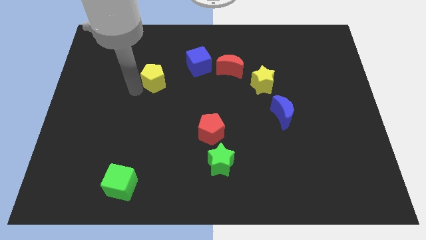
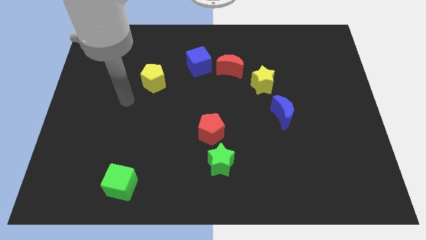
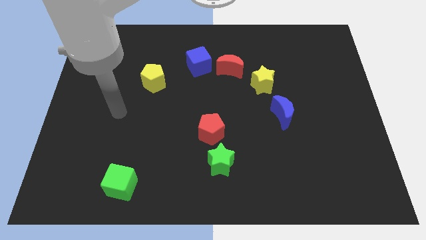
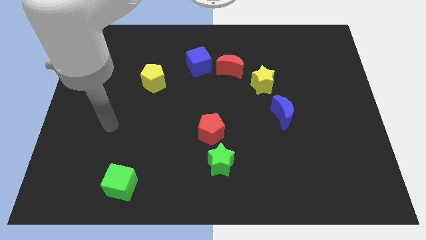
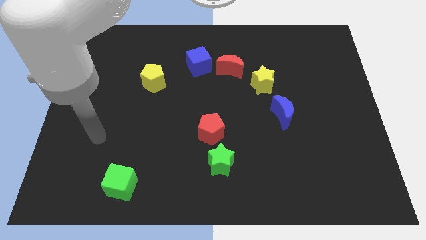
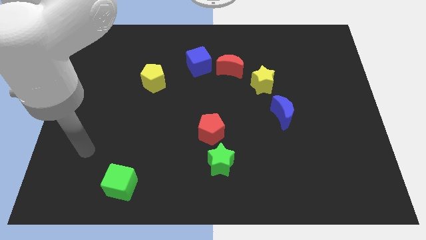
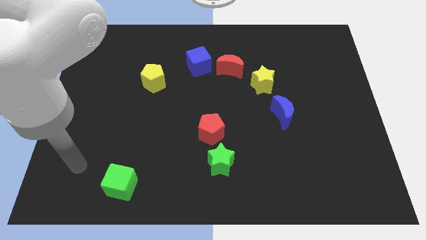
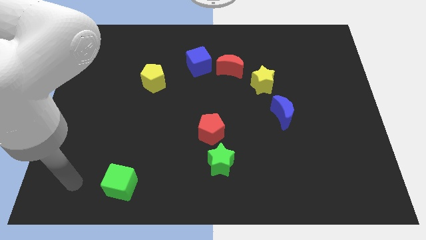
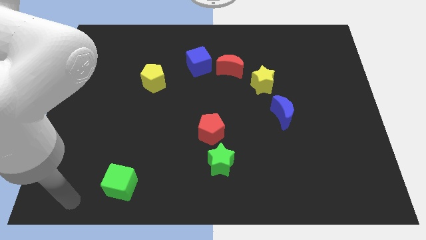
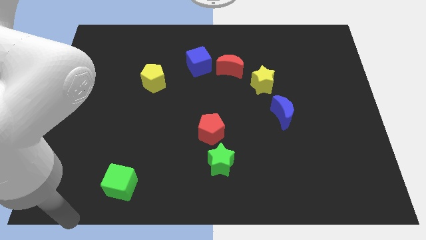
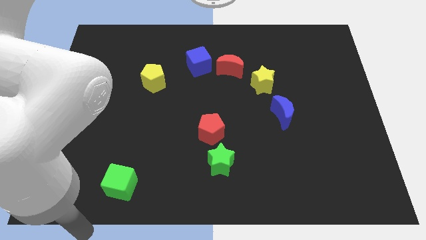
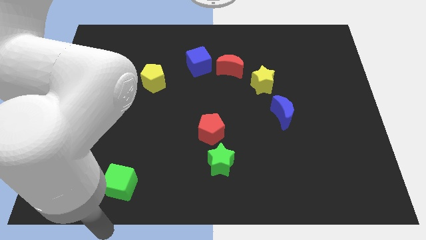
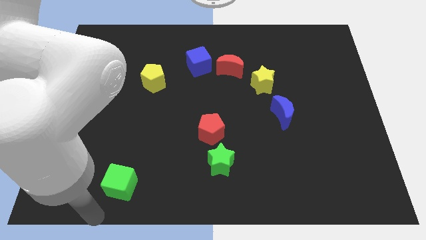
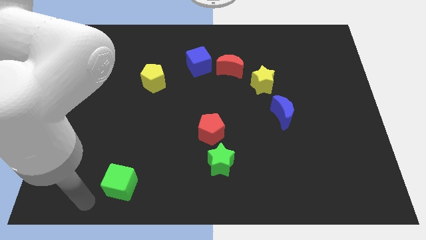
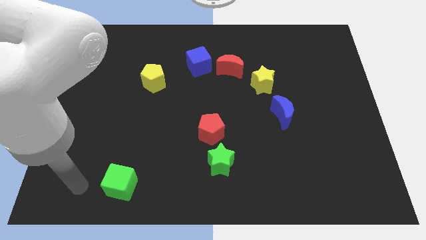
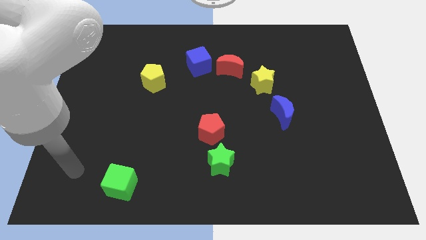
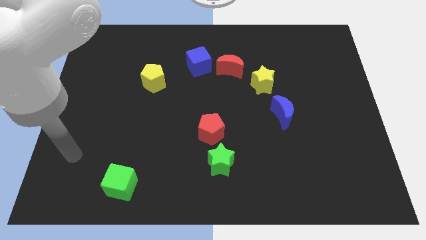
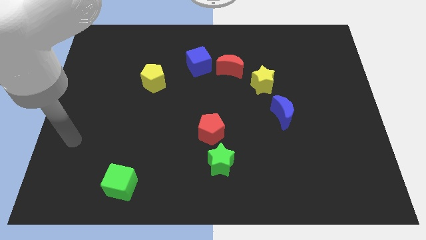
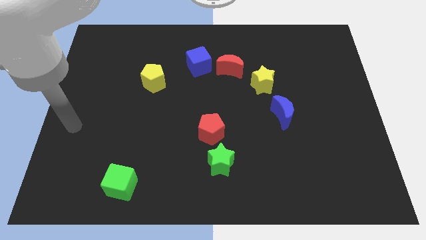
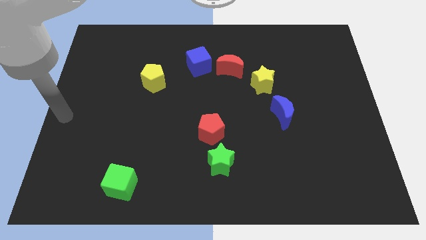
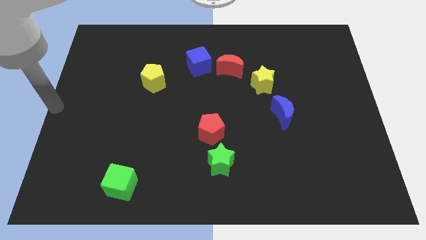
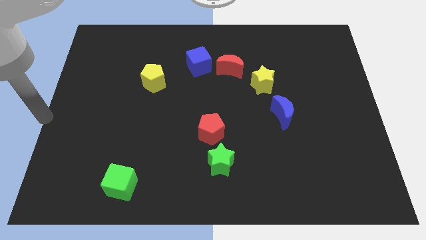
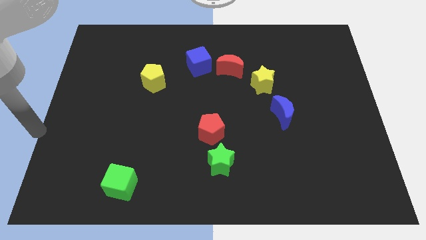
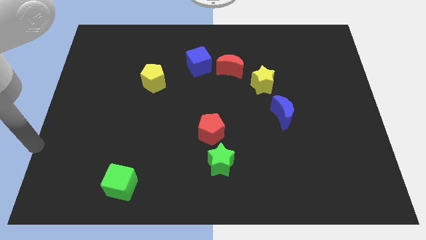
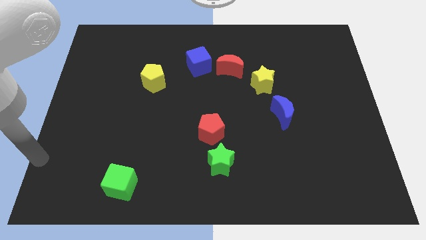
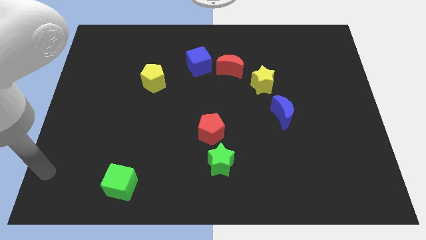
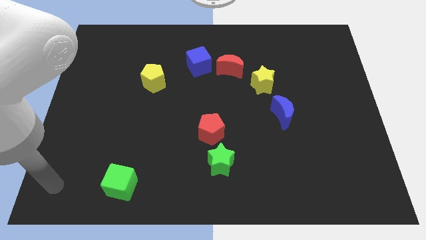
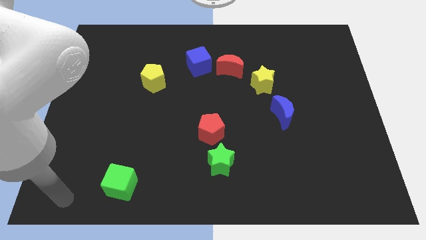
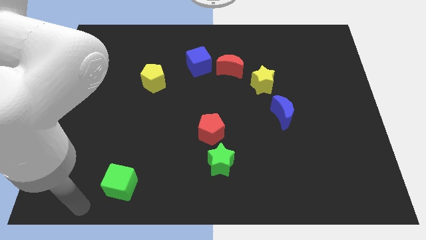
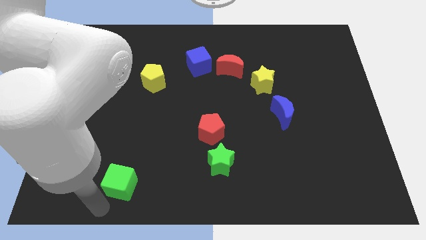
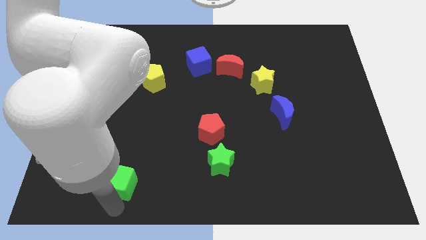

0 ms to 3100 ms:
drag your arm vertically below the green cube

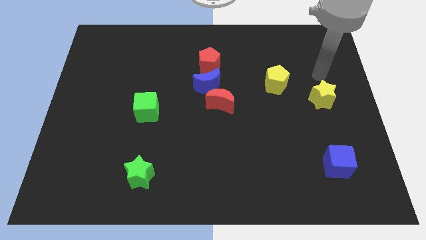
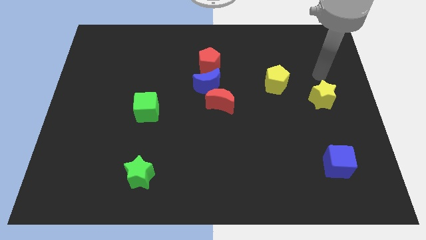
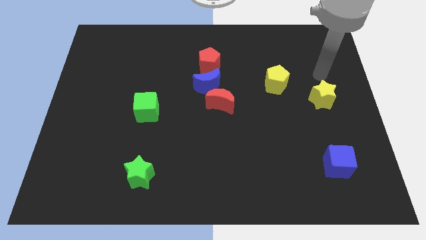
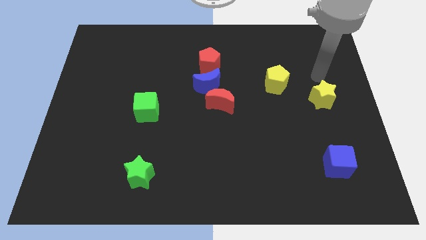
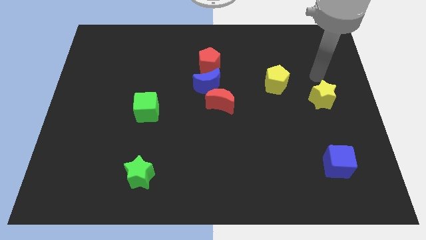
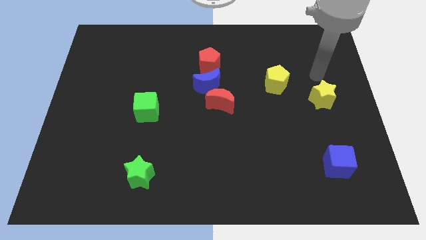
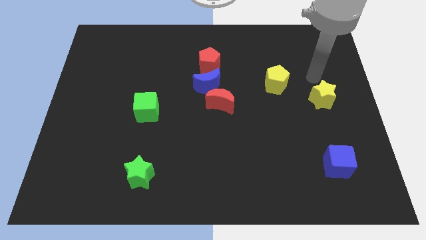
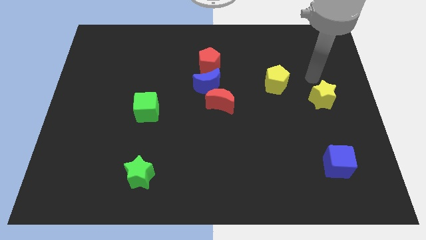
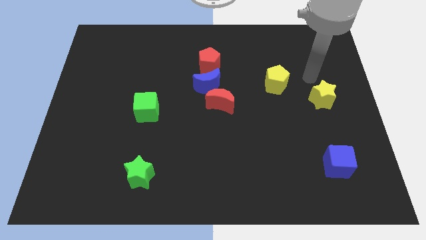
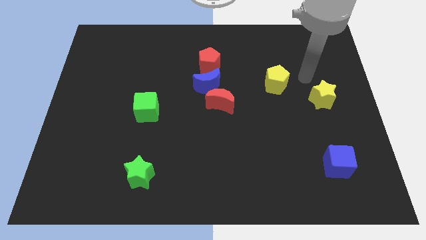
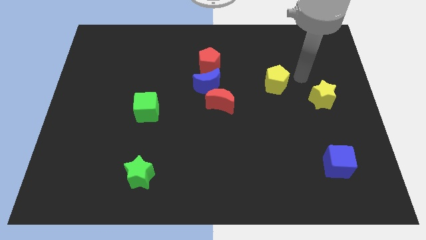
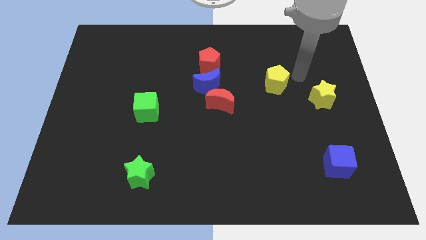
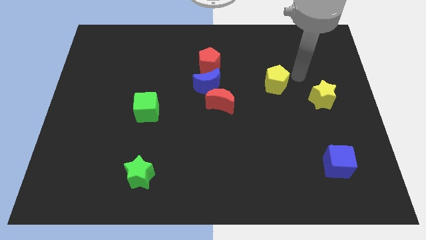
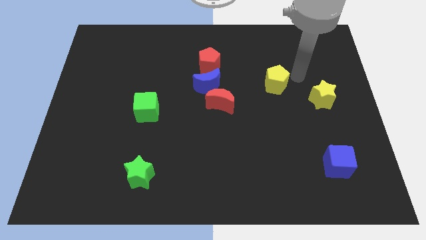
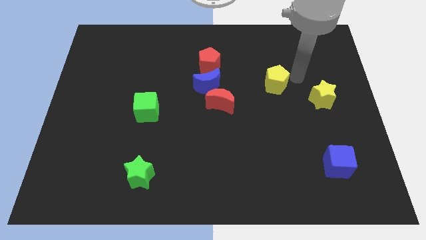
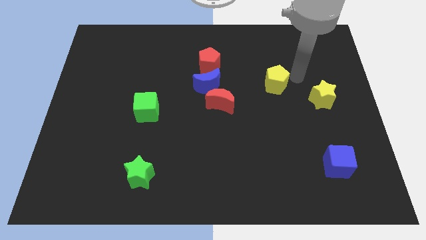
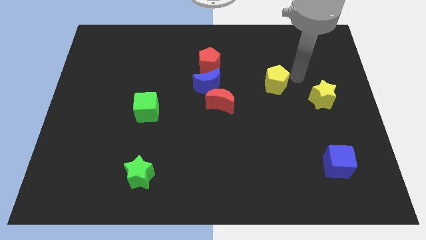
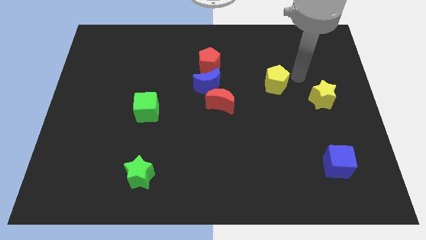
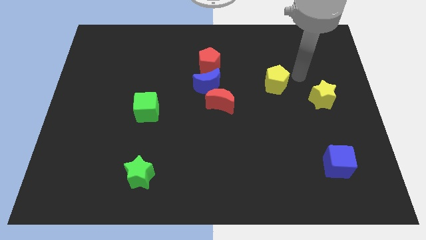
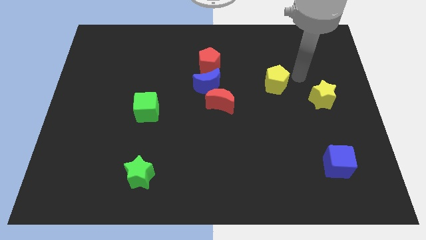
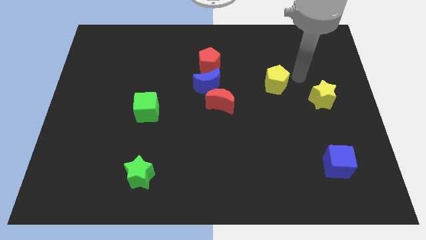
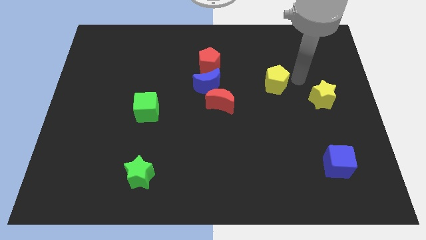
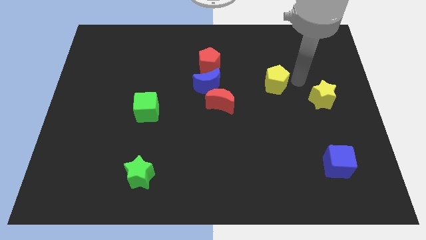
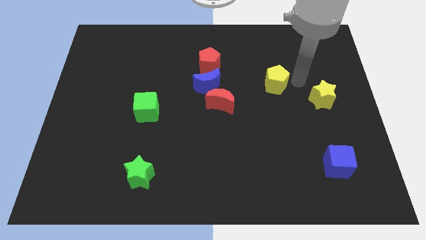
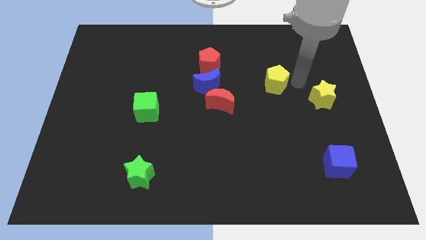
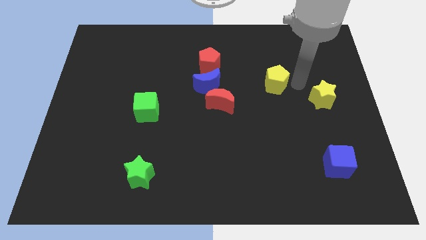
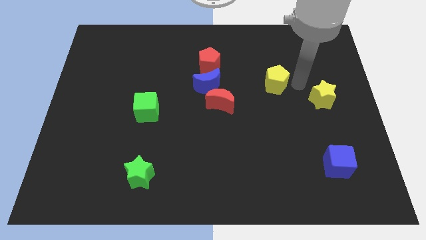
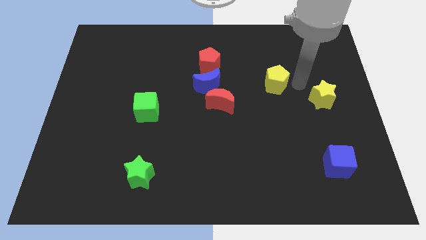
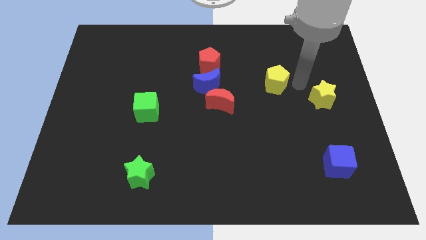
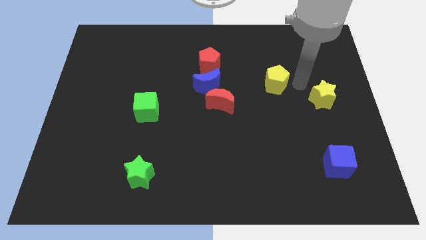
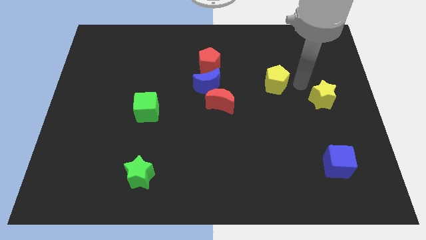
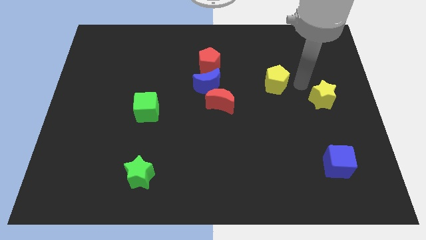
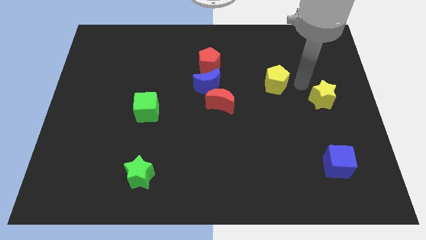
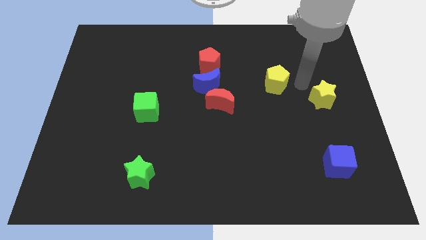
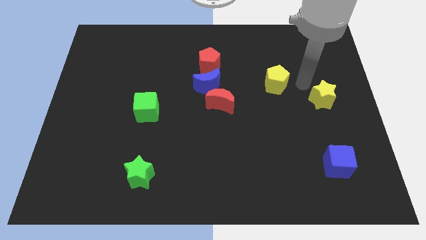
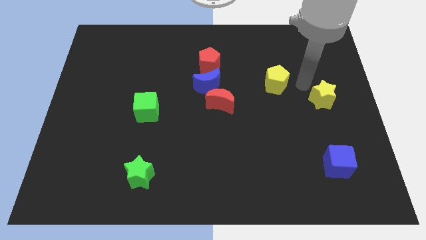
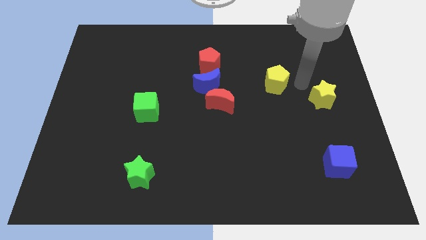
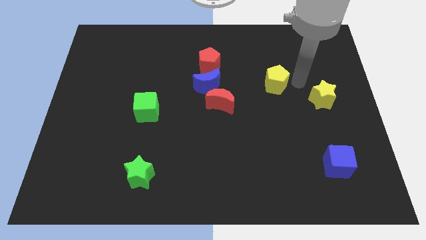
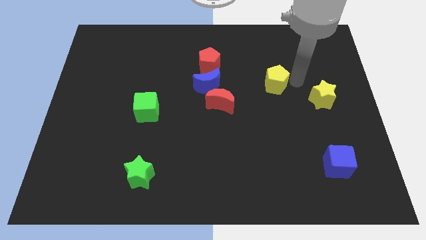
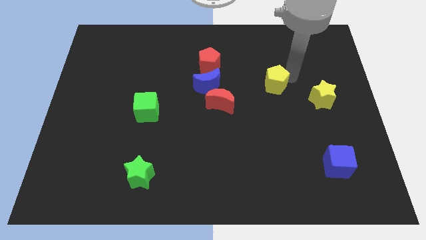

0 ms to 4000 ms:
point your arm top right to yellow pentagon

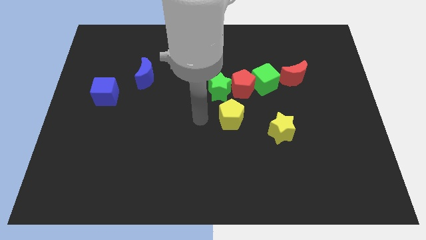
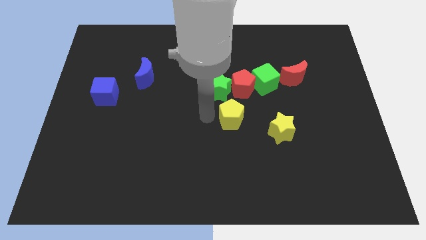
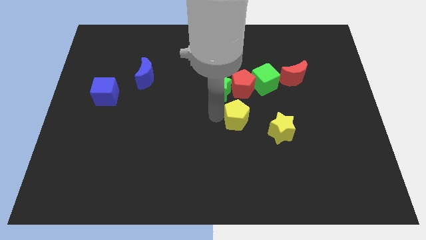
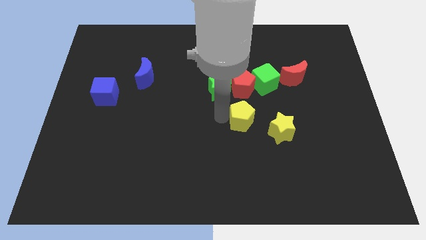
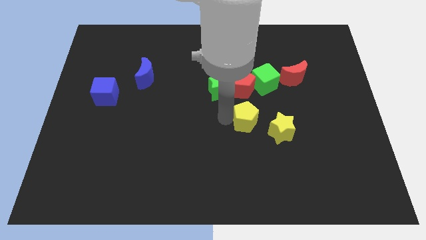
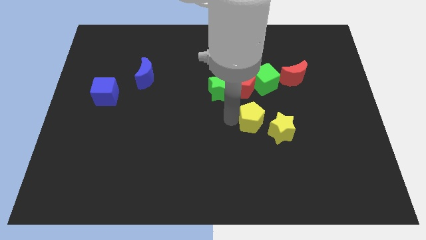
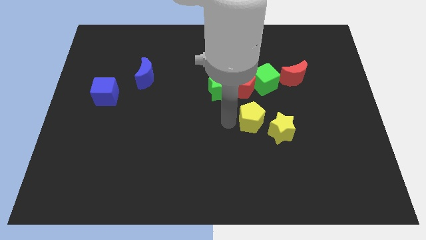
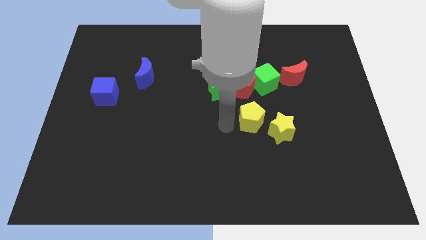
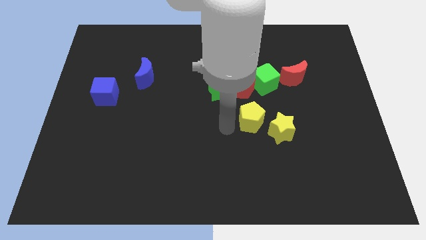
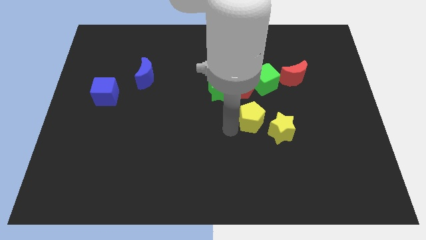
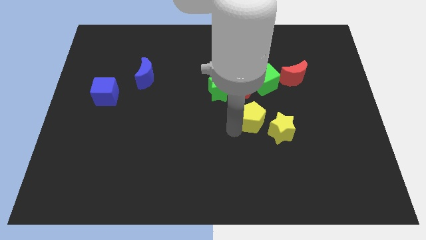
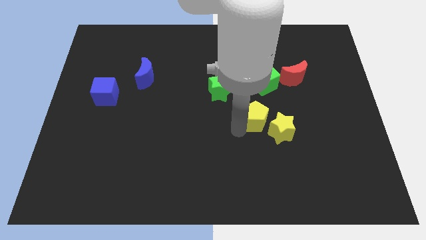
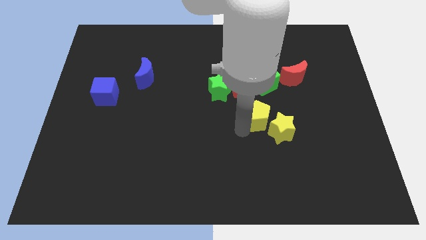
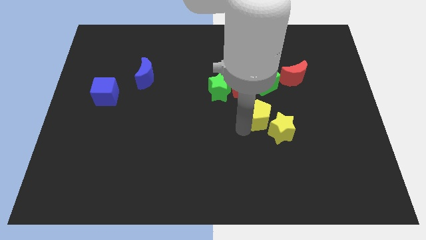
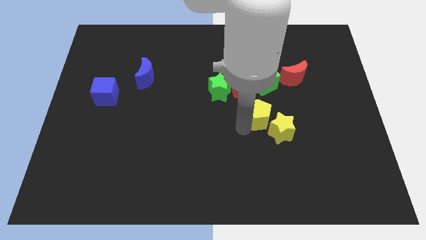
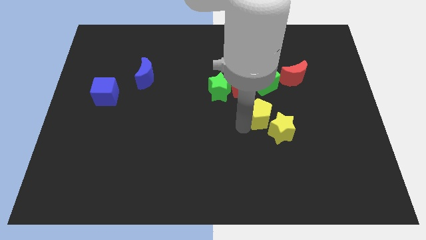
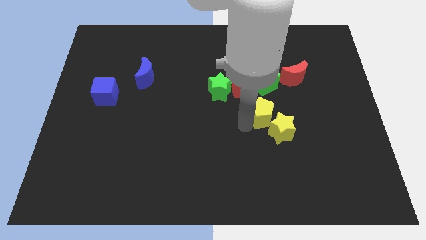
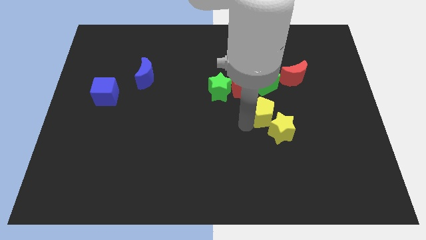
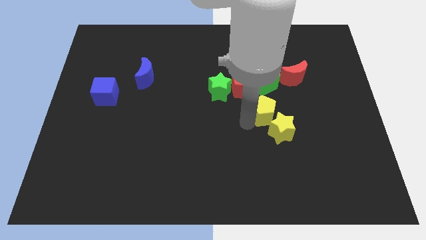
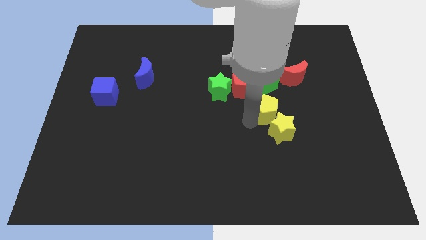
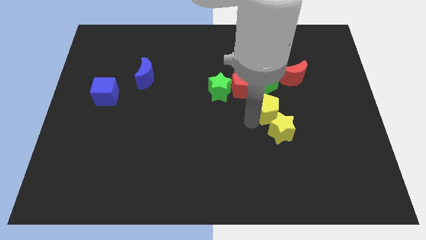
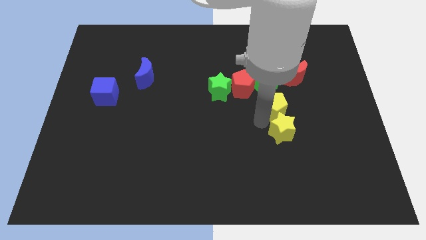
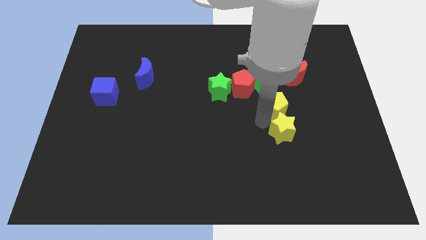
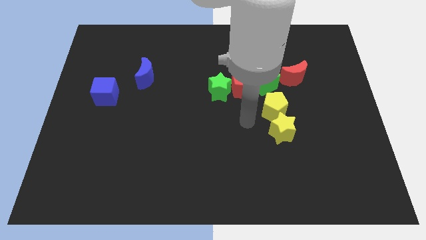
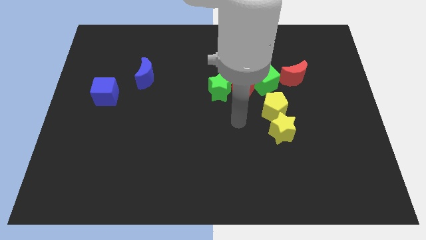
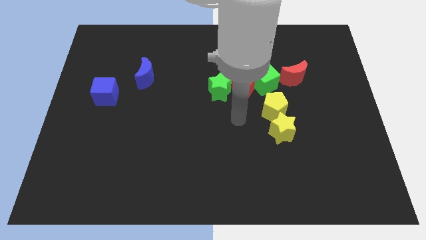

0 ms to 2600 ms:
place yellow pentagon in between the yellow star and green cube
